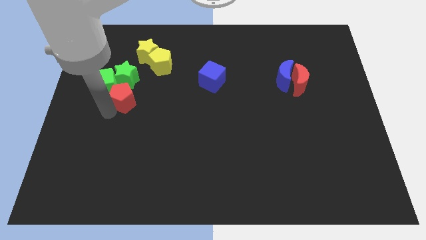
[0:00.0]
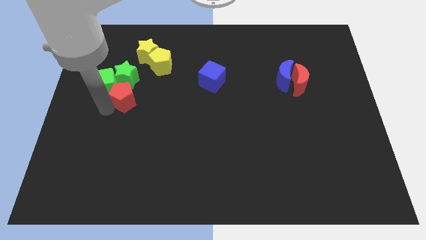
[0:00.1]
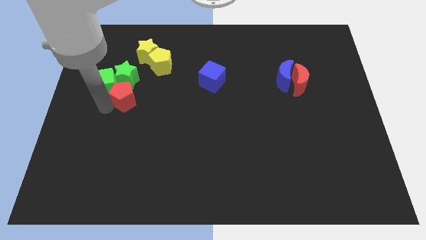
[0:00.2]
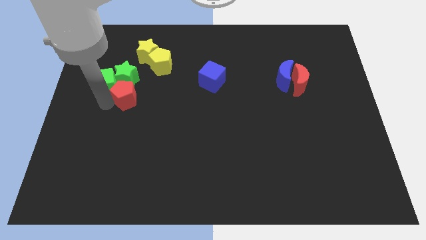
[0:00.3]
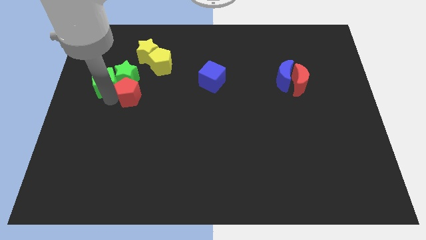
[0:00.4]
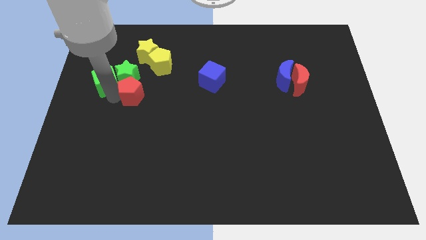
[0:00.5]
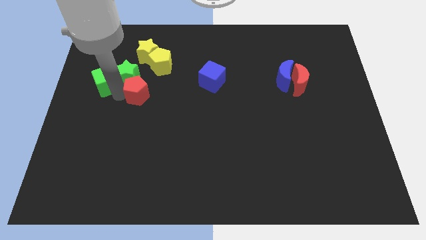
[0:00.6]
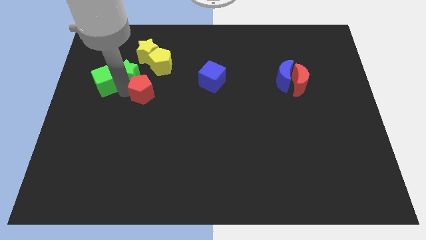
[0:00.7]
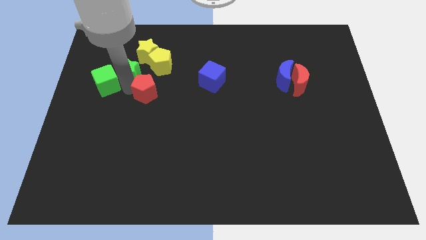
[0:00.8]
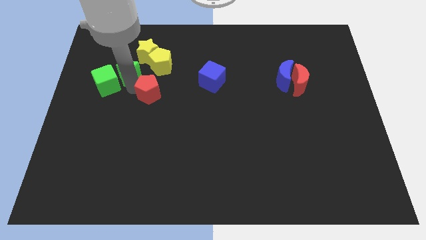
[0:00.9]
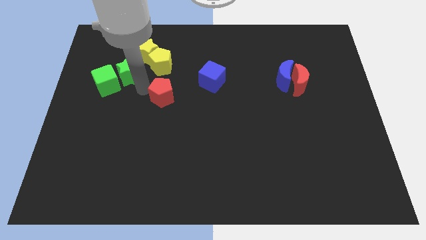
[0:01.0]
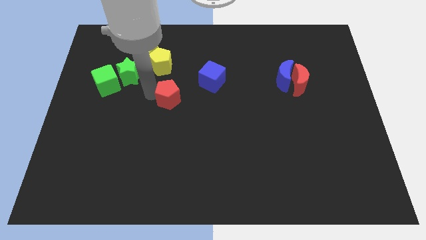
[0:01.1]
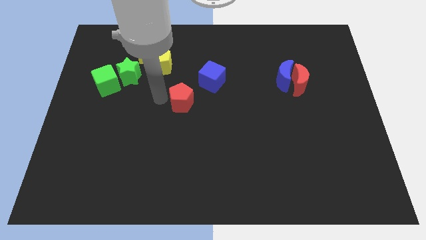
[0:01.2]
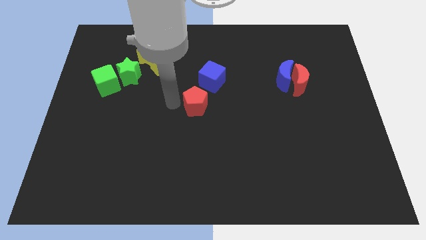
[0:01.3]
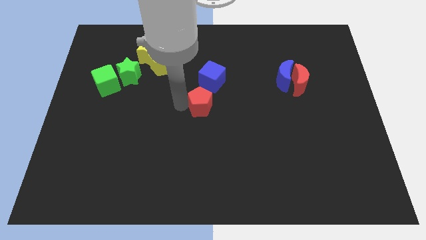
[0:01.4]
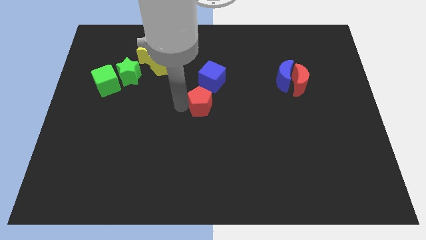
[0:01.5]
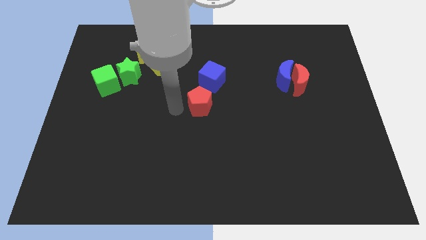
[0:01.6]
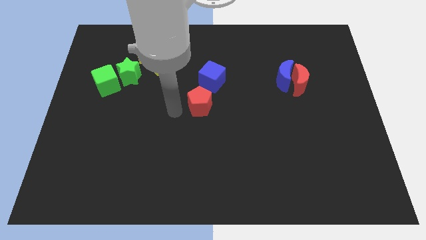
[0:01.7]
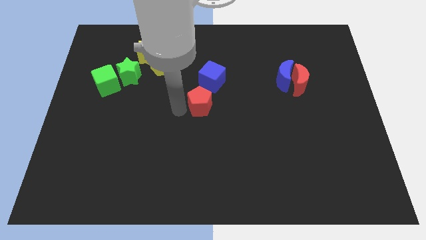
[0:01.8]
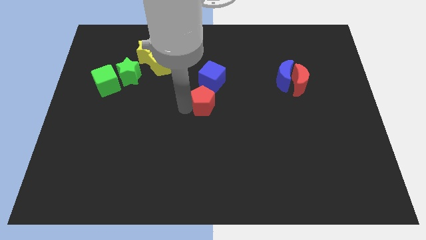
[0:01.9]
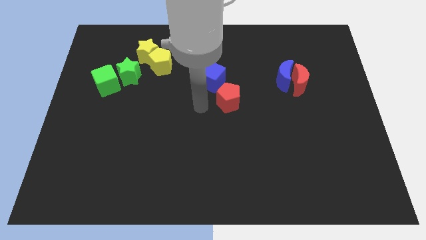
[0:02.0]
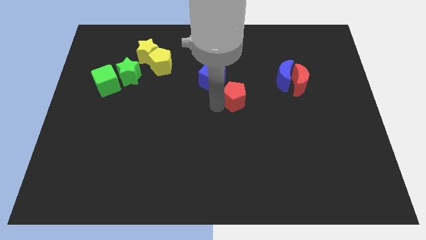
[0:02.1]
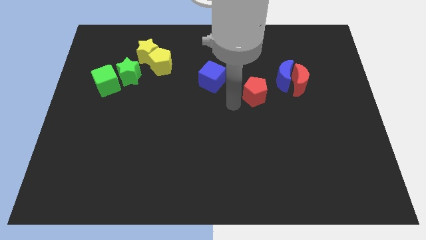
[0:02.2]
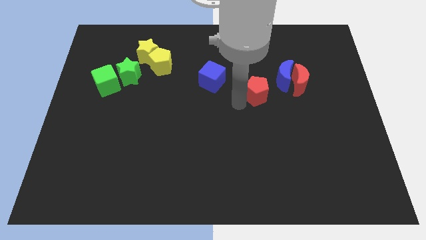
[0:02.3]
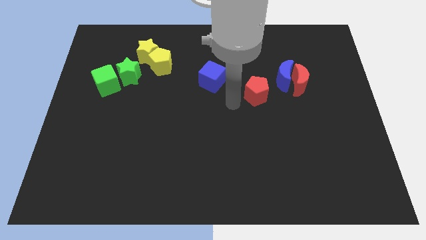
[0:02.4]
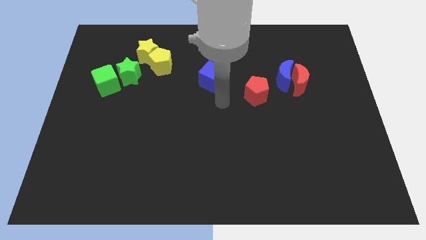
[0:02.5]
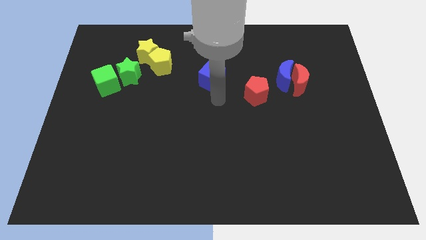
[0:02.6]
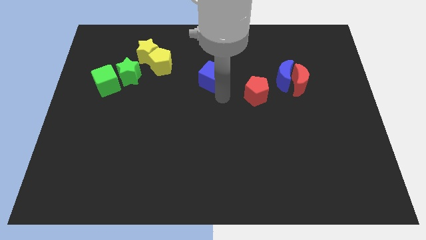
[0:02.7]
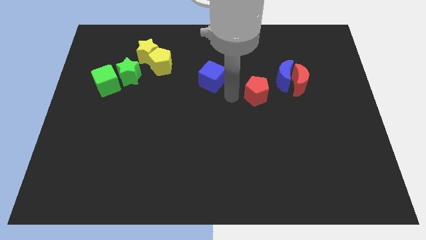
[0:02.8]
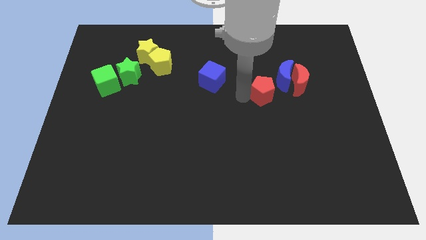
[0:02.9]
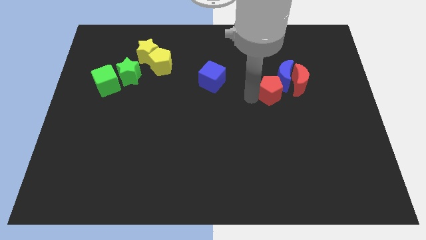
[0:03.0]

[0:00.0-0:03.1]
move the red pentagon towards the bottom left side of the blue moon

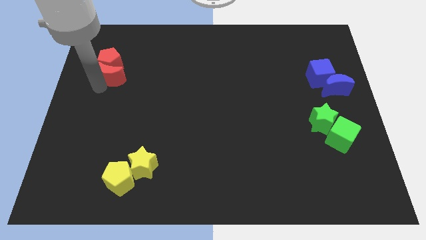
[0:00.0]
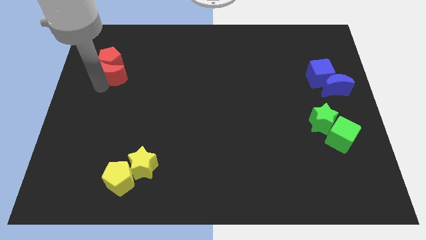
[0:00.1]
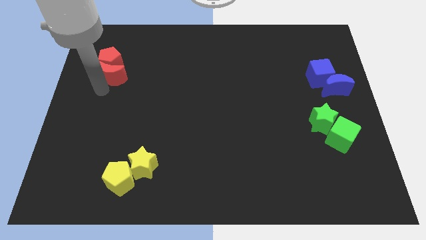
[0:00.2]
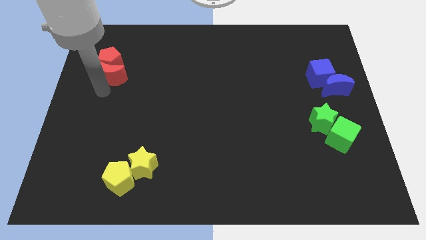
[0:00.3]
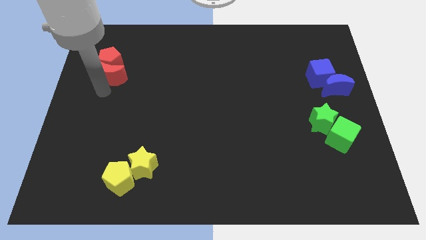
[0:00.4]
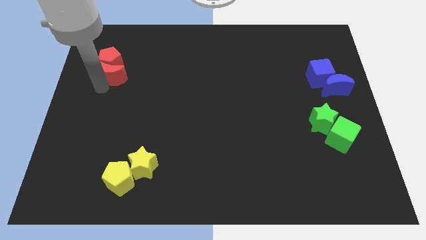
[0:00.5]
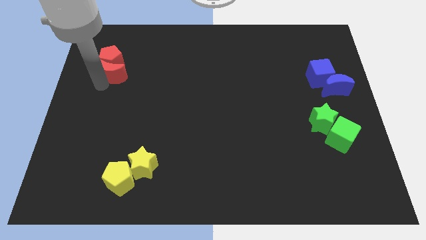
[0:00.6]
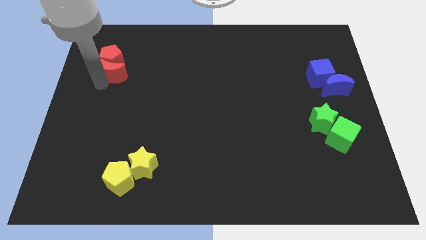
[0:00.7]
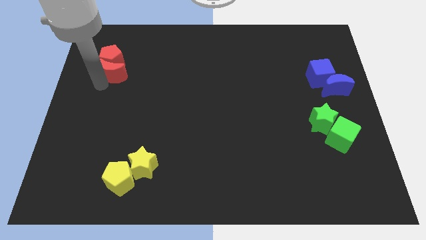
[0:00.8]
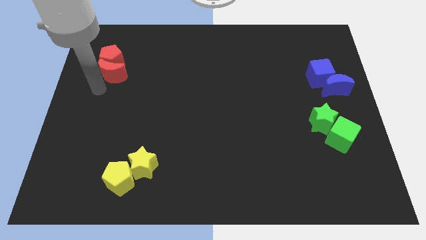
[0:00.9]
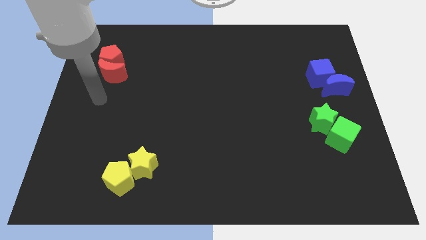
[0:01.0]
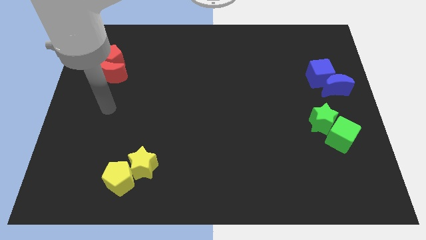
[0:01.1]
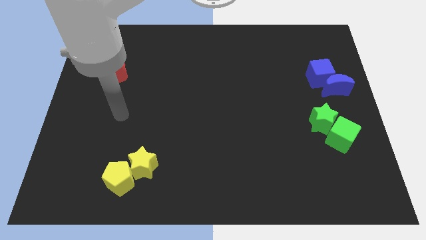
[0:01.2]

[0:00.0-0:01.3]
slightly push the red blocks upwards

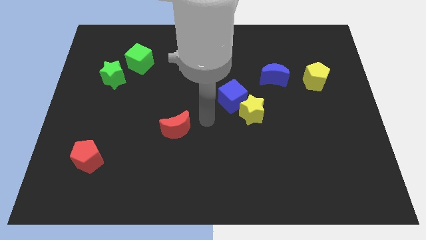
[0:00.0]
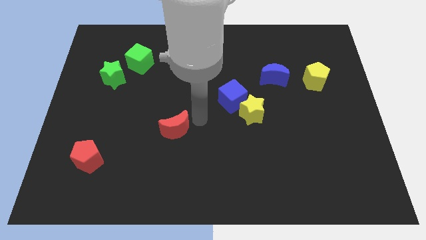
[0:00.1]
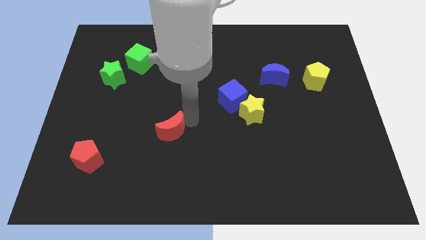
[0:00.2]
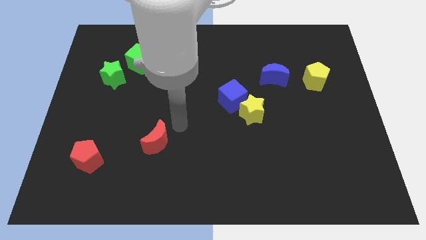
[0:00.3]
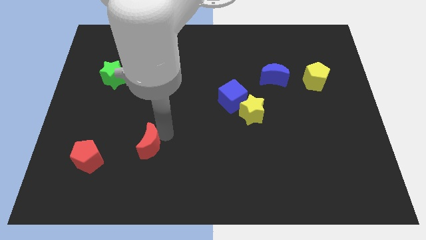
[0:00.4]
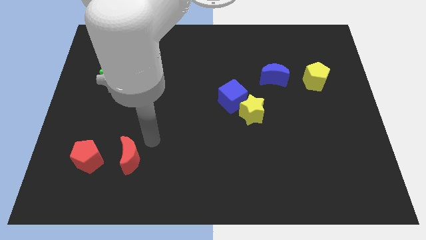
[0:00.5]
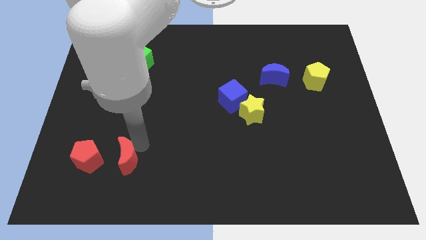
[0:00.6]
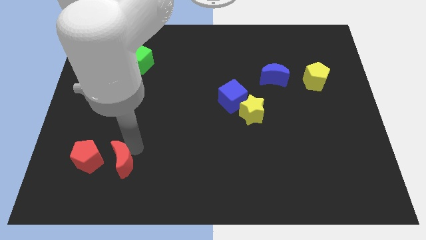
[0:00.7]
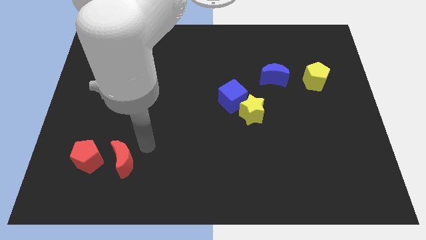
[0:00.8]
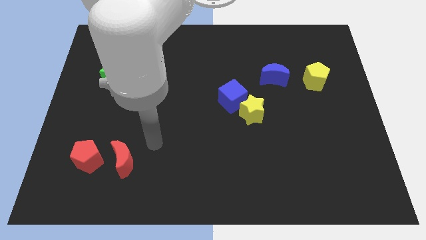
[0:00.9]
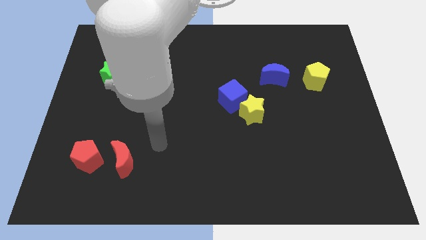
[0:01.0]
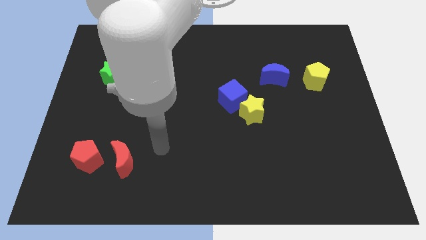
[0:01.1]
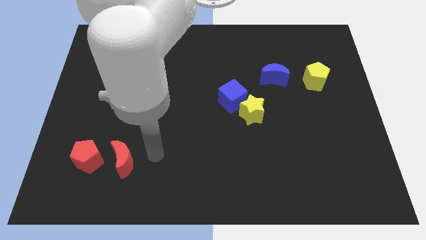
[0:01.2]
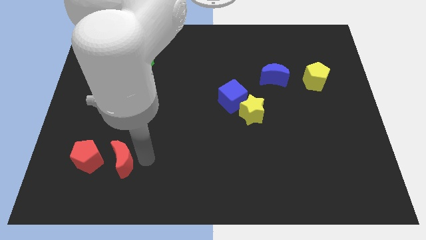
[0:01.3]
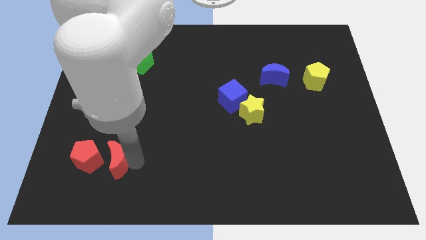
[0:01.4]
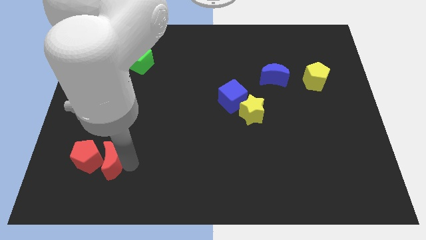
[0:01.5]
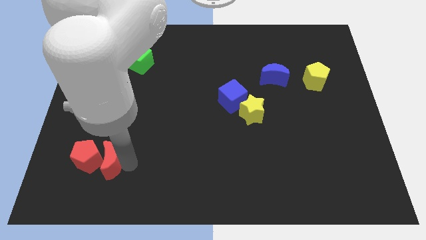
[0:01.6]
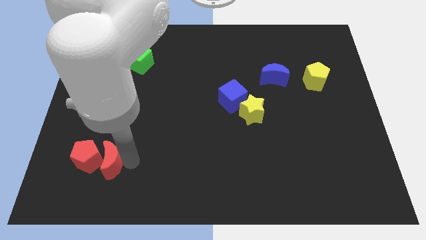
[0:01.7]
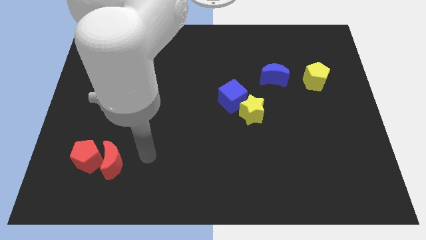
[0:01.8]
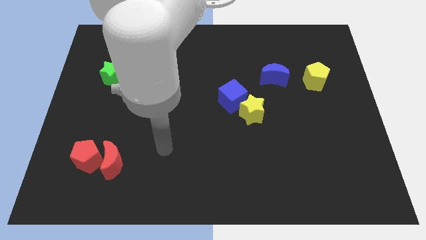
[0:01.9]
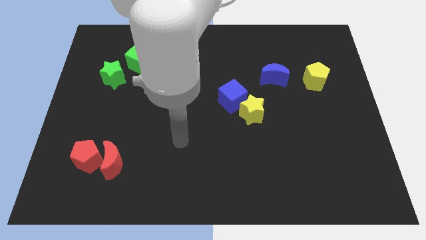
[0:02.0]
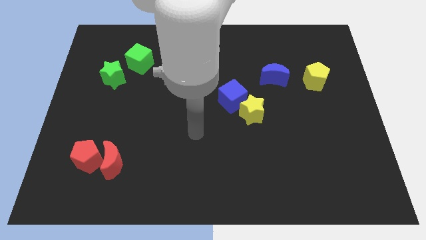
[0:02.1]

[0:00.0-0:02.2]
place the red crescent close red pentagon

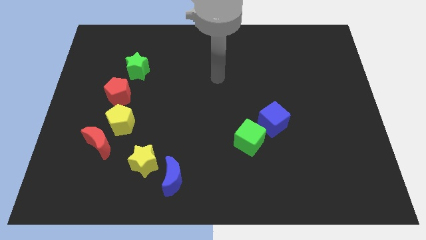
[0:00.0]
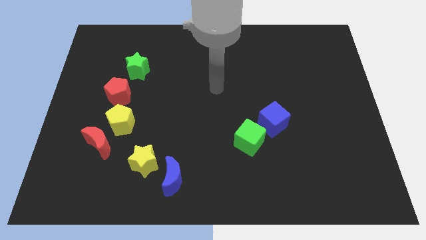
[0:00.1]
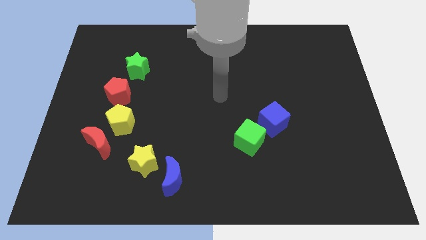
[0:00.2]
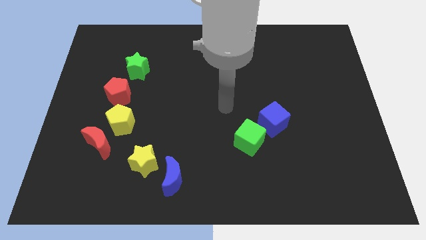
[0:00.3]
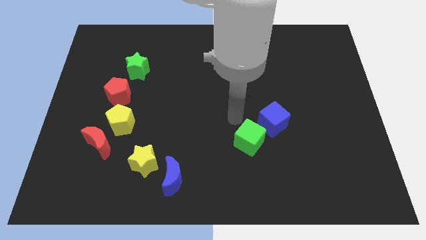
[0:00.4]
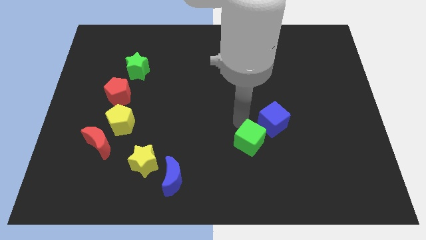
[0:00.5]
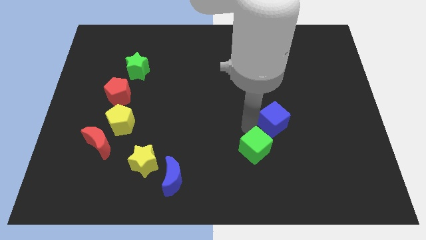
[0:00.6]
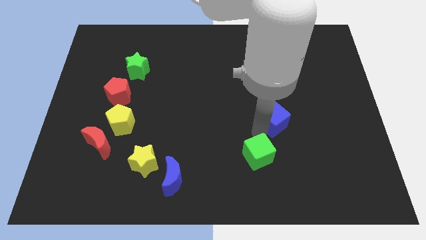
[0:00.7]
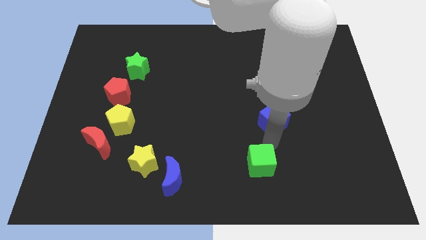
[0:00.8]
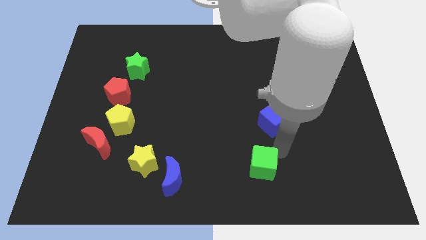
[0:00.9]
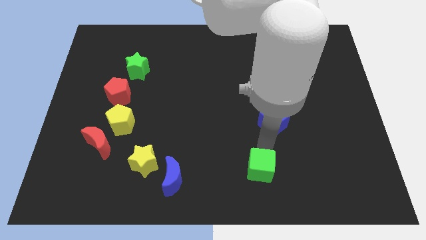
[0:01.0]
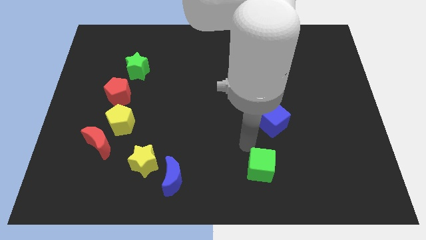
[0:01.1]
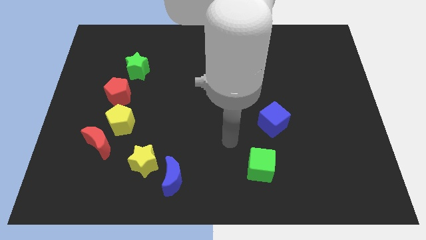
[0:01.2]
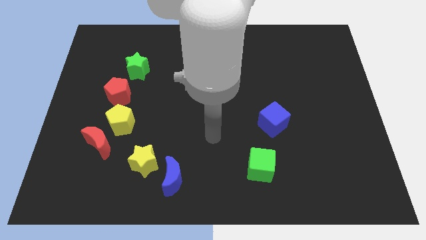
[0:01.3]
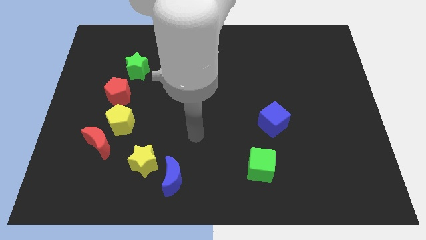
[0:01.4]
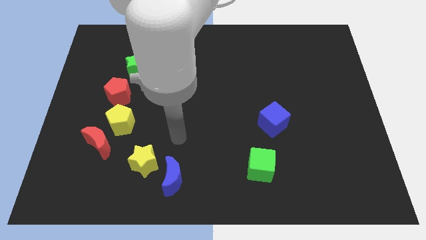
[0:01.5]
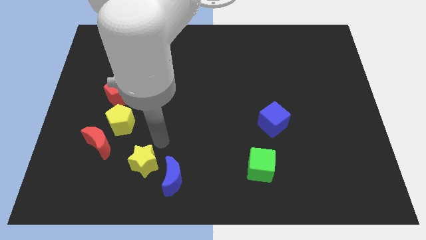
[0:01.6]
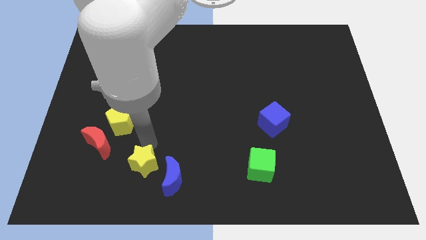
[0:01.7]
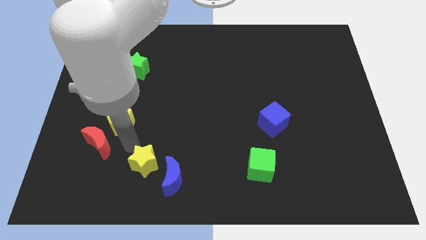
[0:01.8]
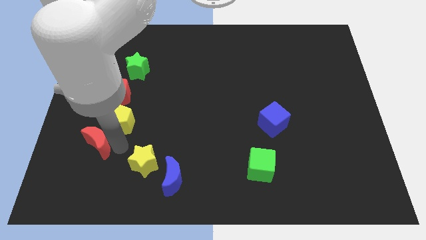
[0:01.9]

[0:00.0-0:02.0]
move the green cube parallel right to the yellow star

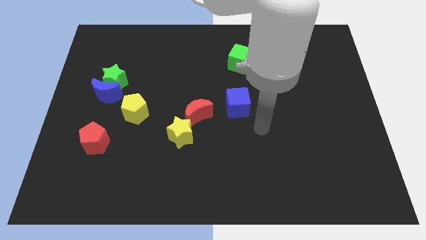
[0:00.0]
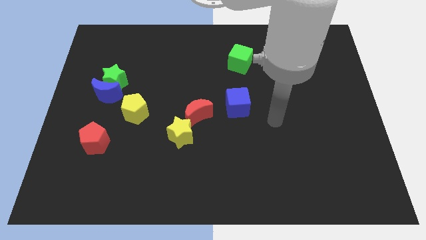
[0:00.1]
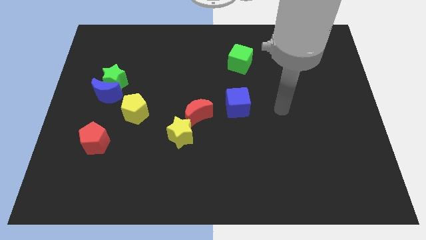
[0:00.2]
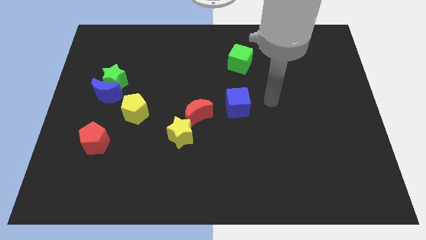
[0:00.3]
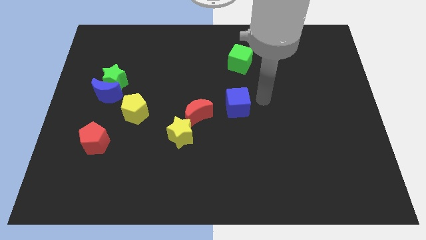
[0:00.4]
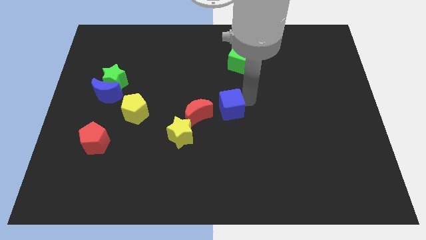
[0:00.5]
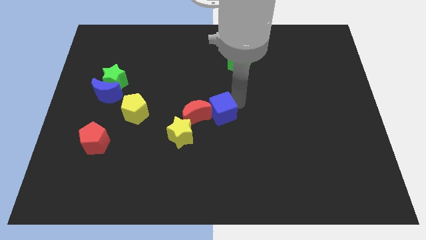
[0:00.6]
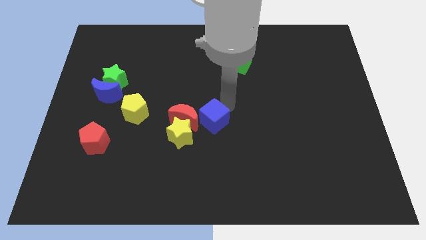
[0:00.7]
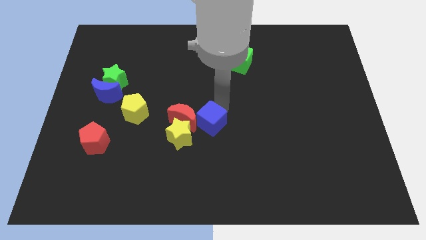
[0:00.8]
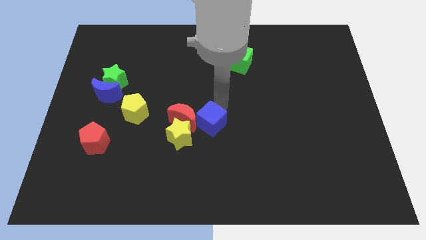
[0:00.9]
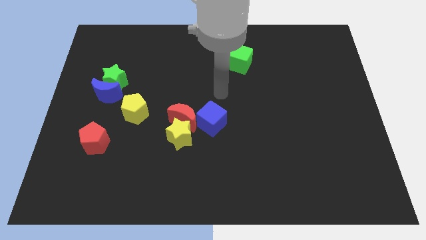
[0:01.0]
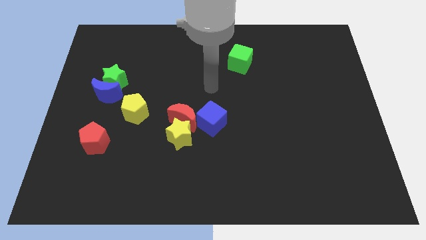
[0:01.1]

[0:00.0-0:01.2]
push the blue cube into the red moon
